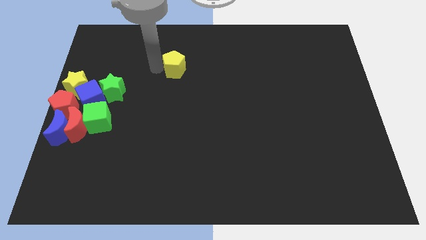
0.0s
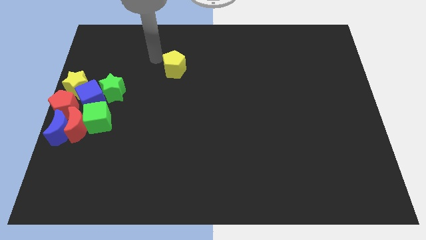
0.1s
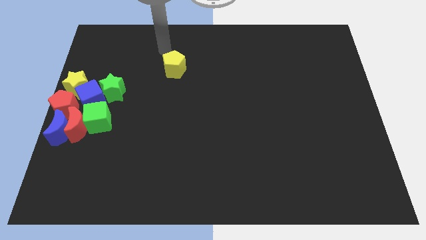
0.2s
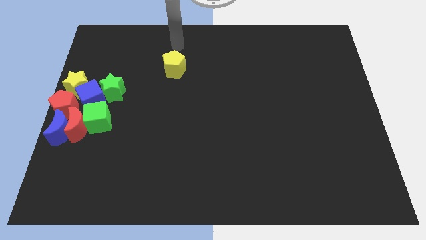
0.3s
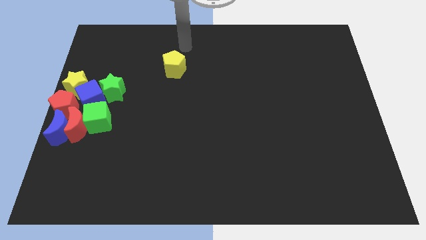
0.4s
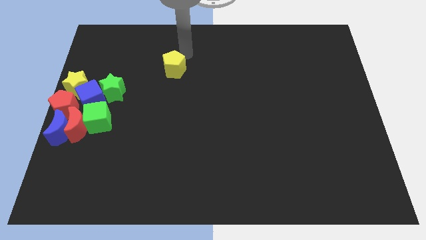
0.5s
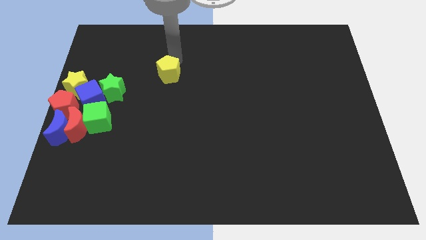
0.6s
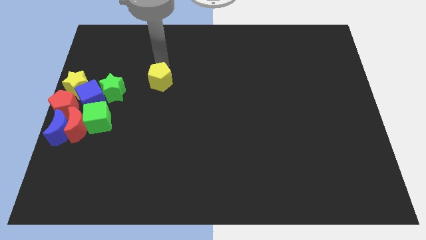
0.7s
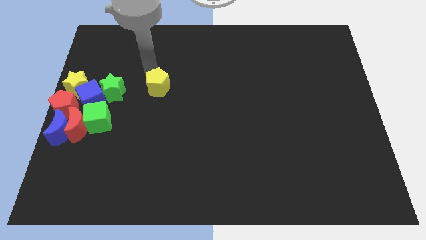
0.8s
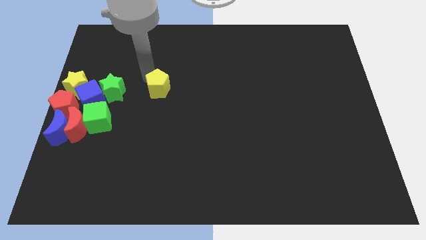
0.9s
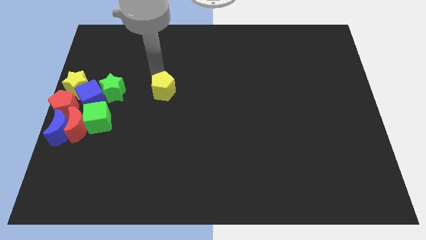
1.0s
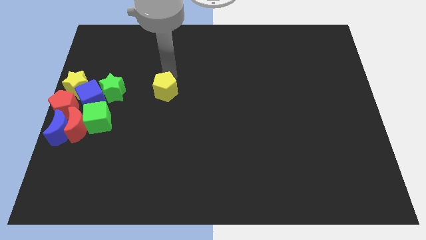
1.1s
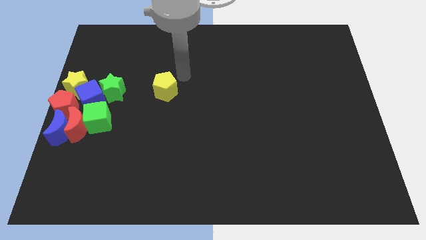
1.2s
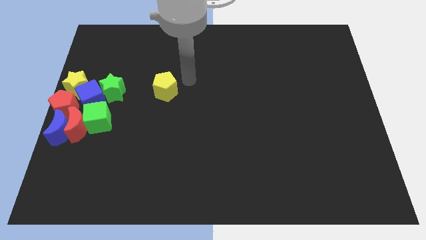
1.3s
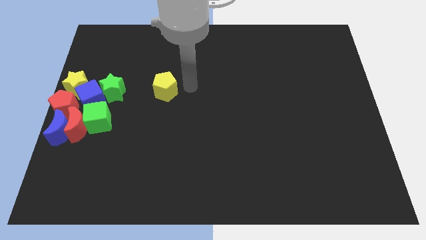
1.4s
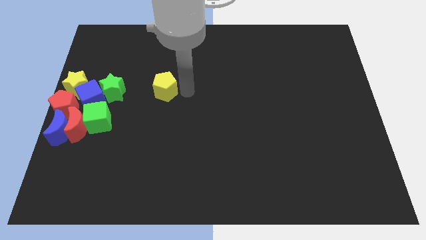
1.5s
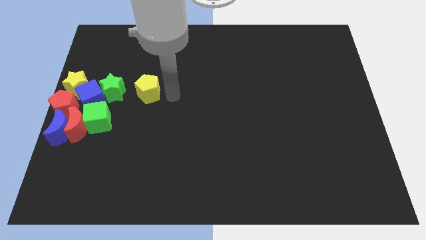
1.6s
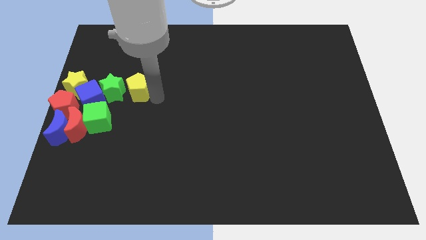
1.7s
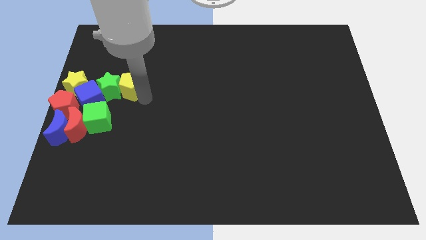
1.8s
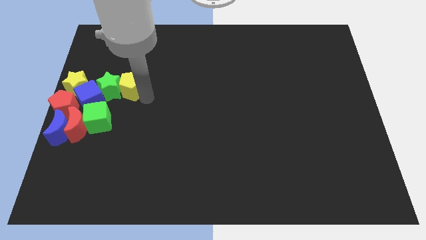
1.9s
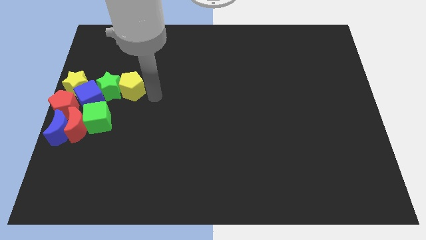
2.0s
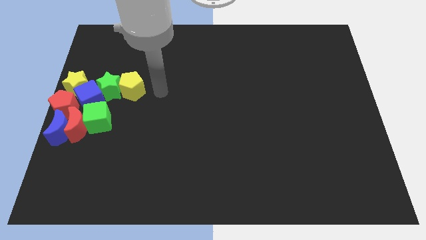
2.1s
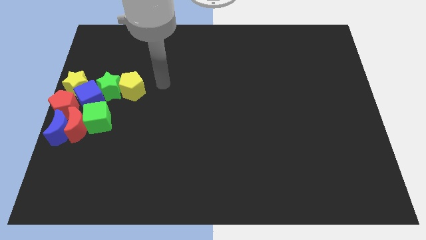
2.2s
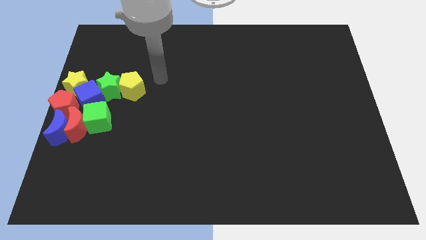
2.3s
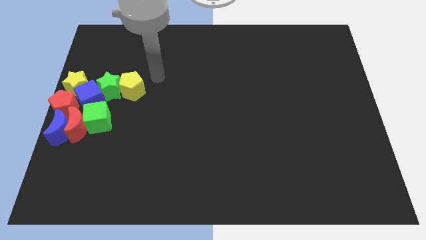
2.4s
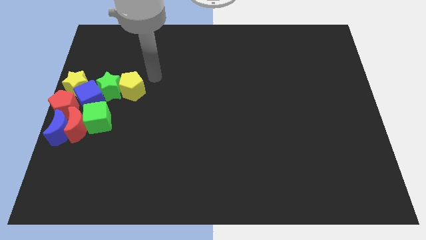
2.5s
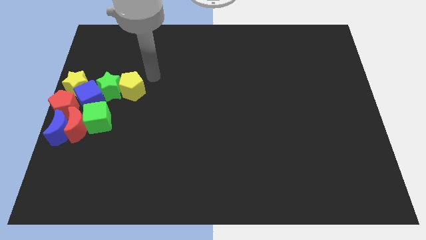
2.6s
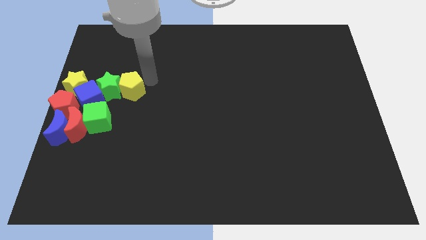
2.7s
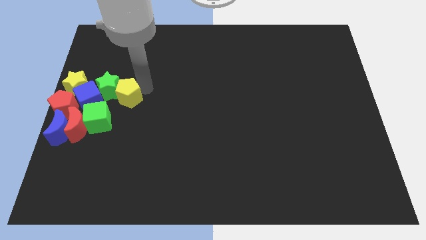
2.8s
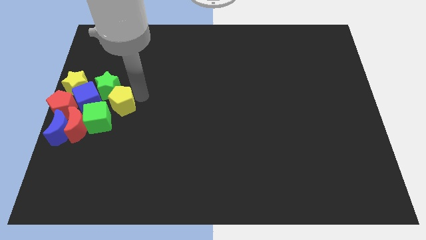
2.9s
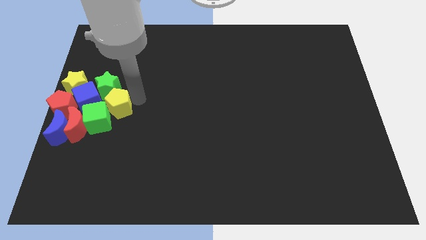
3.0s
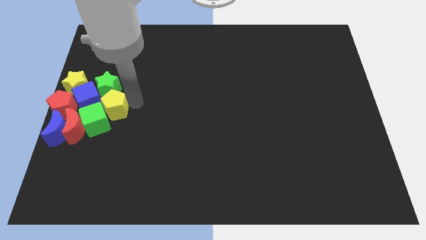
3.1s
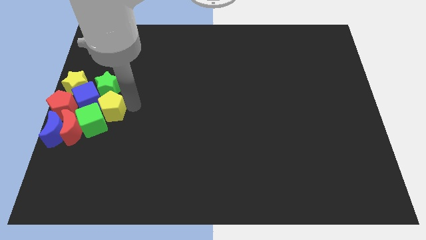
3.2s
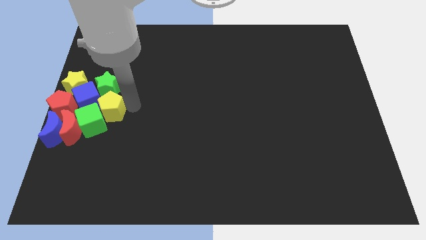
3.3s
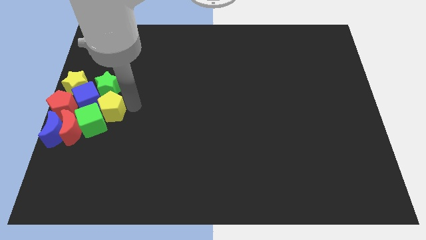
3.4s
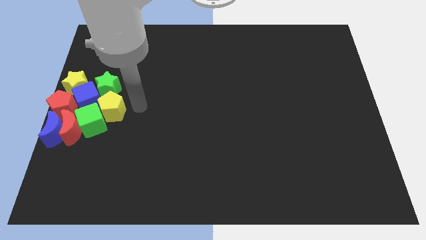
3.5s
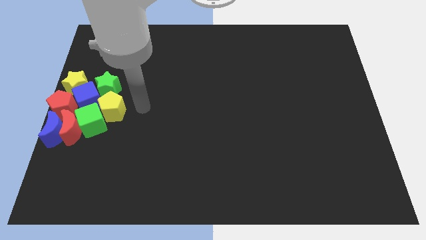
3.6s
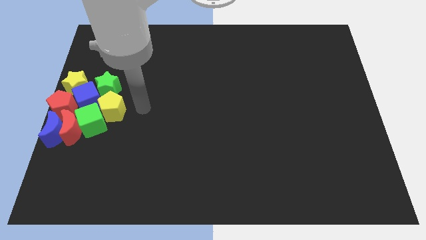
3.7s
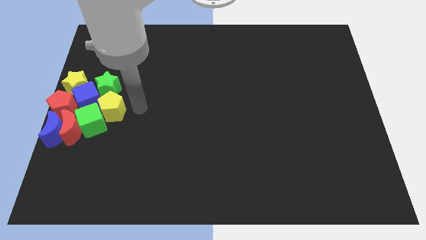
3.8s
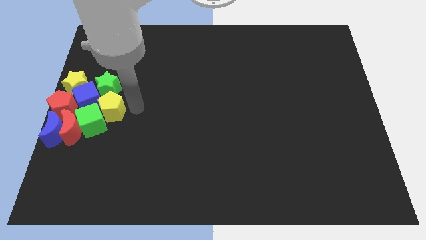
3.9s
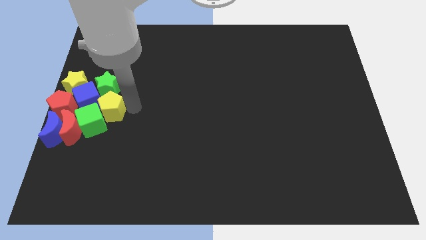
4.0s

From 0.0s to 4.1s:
move the yellow pentagon into the green cube

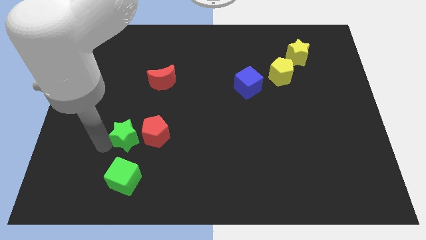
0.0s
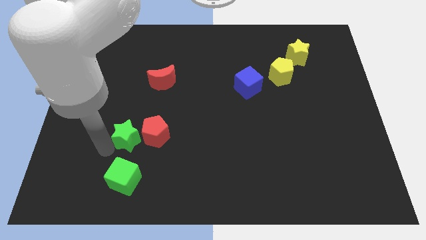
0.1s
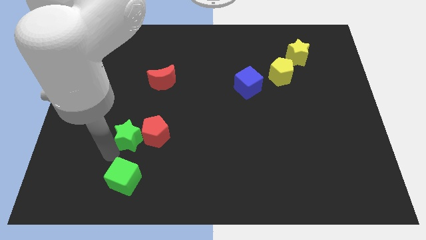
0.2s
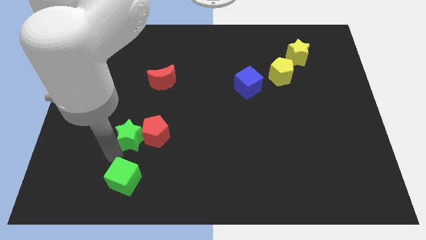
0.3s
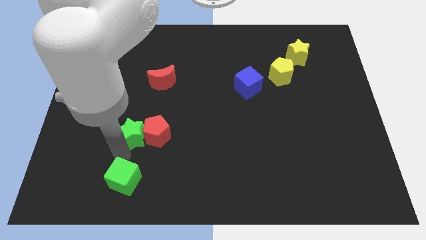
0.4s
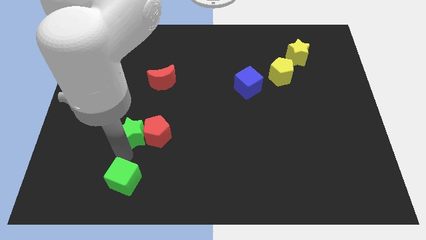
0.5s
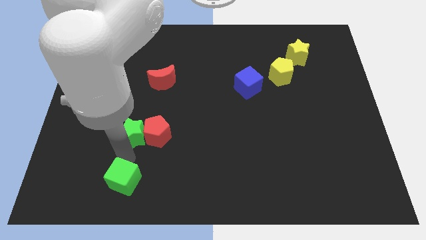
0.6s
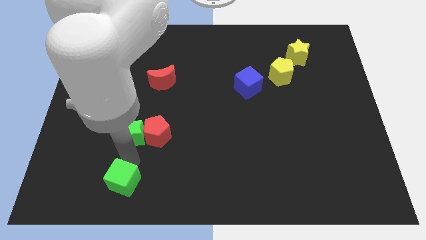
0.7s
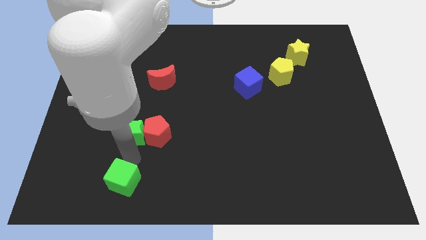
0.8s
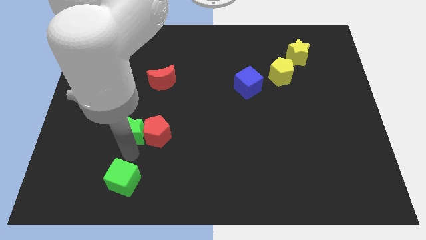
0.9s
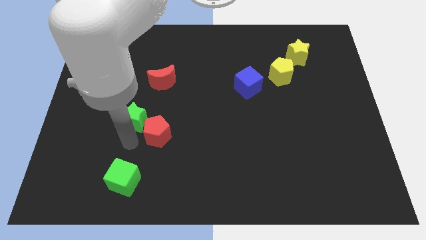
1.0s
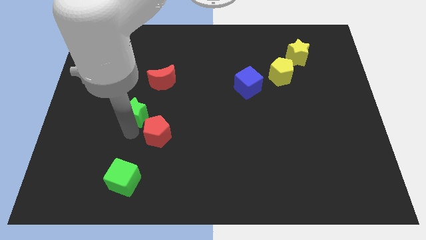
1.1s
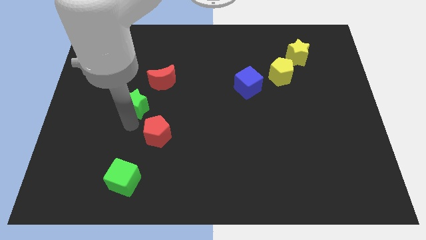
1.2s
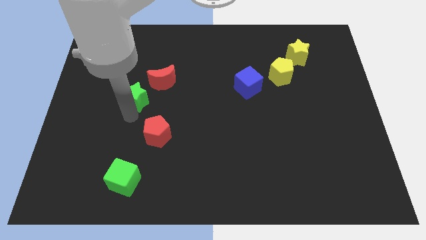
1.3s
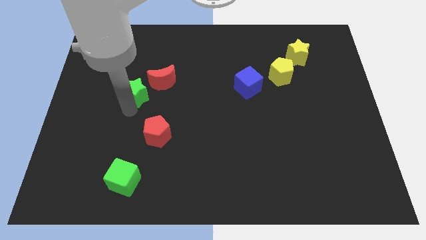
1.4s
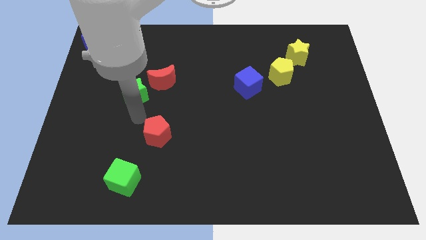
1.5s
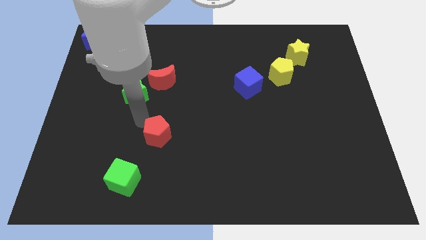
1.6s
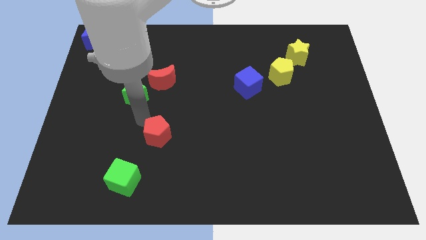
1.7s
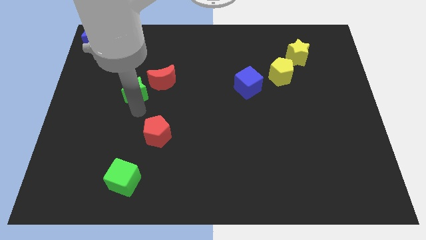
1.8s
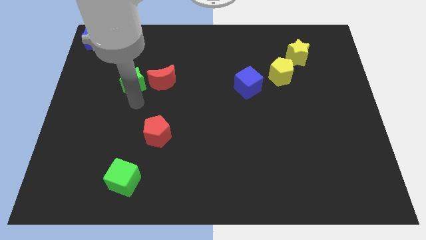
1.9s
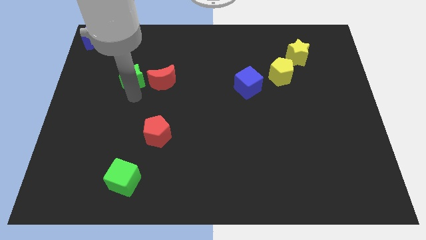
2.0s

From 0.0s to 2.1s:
push the green star to the left of the red crescent

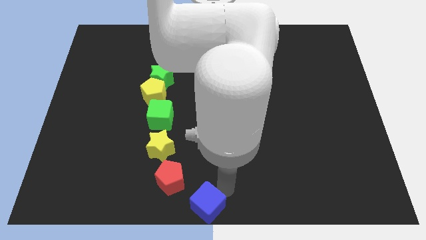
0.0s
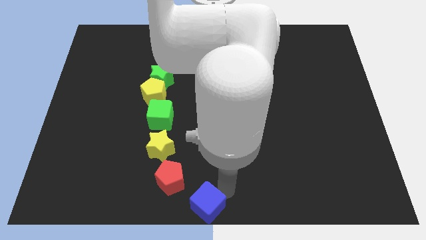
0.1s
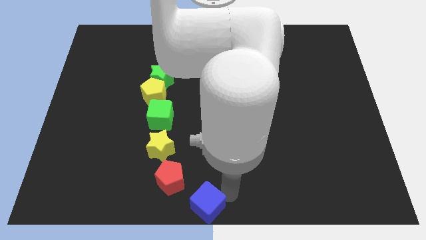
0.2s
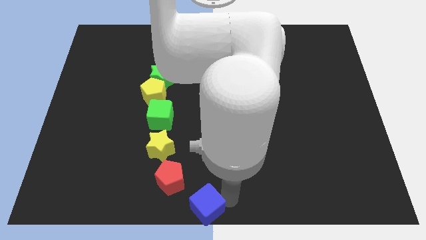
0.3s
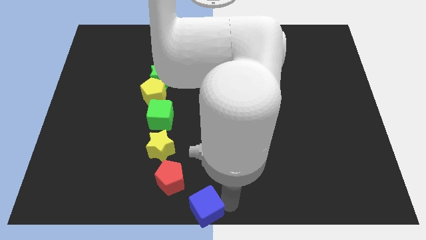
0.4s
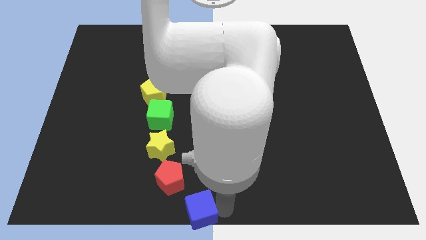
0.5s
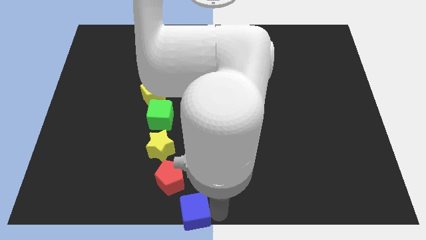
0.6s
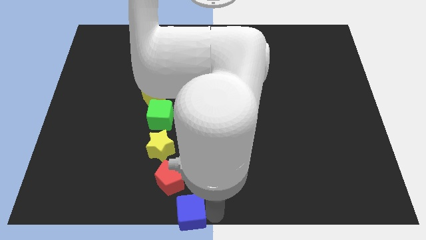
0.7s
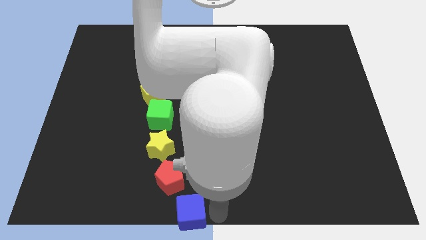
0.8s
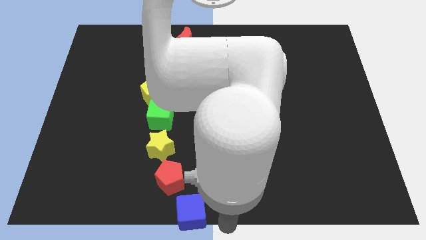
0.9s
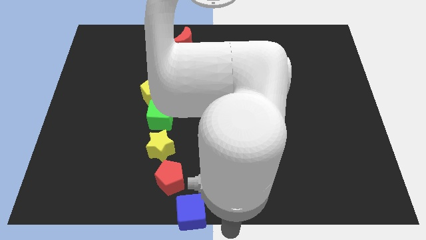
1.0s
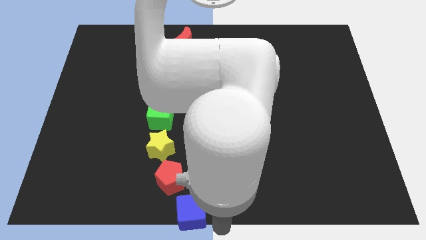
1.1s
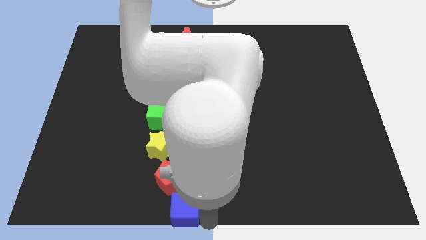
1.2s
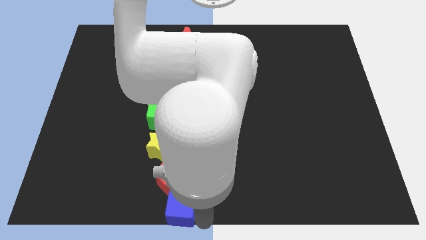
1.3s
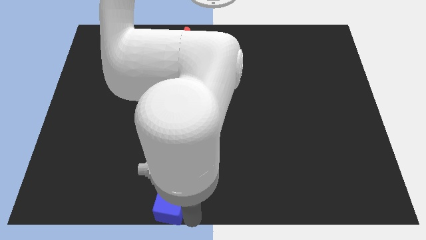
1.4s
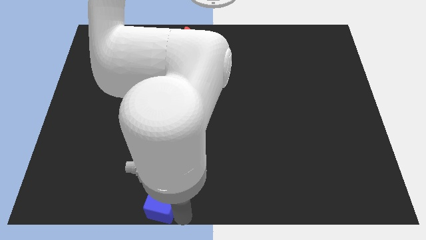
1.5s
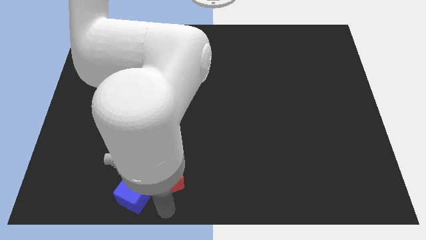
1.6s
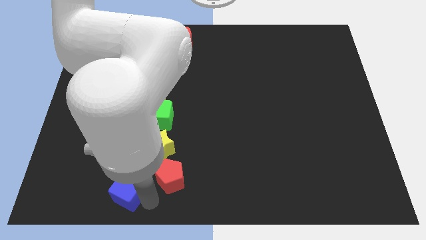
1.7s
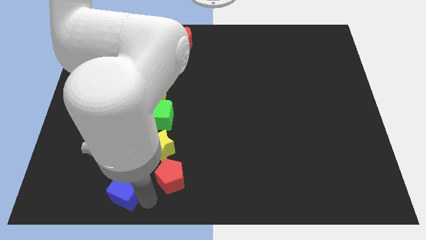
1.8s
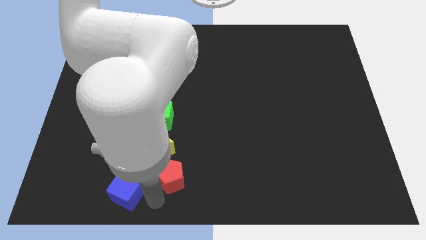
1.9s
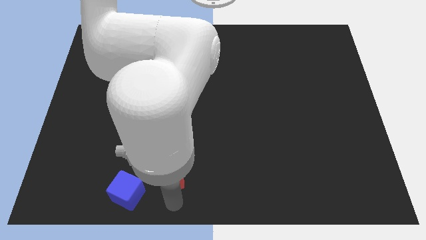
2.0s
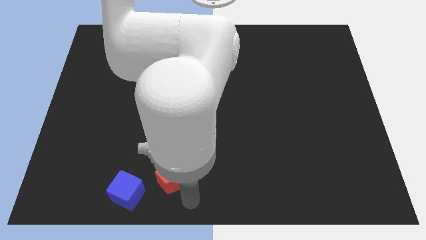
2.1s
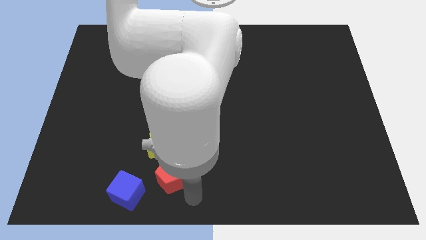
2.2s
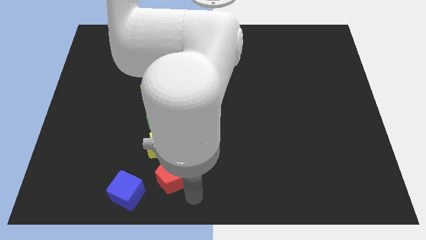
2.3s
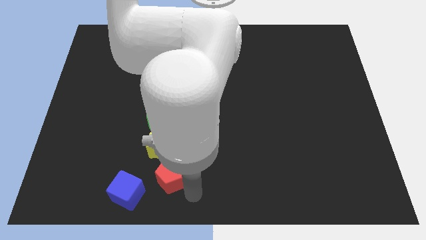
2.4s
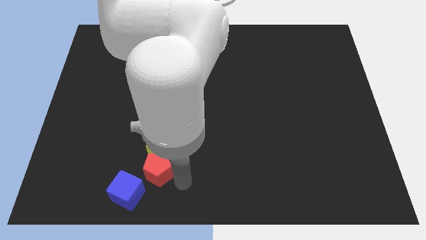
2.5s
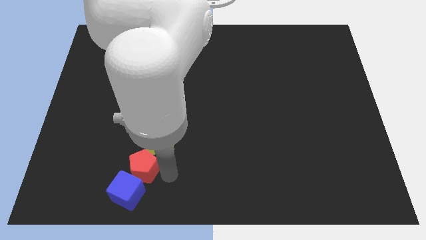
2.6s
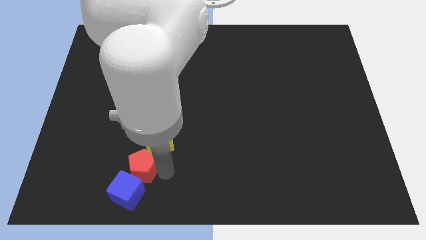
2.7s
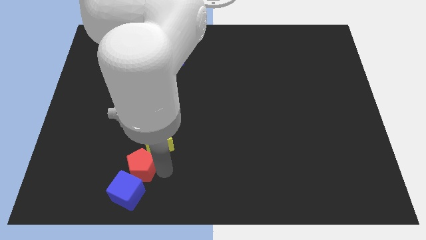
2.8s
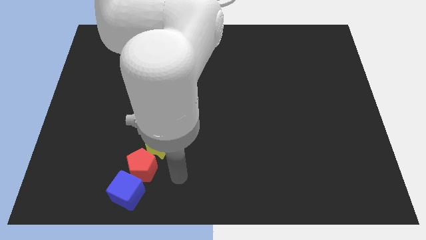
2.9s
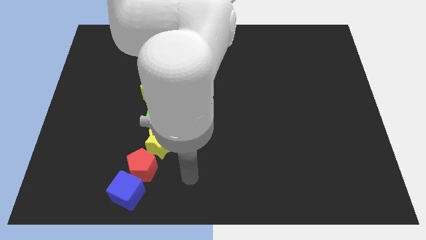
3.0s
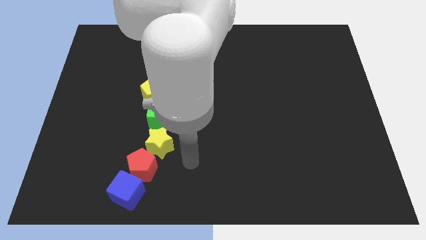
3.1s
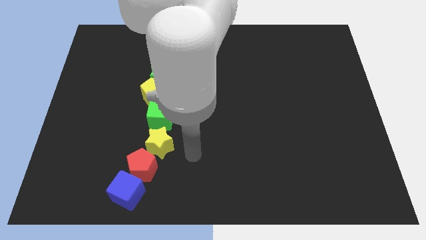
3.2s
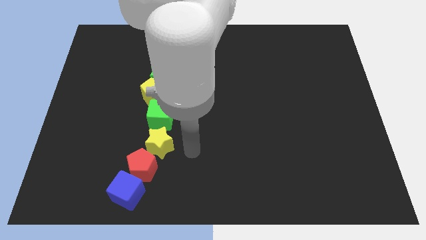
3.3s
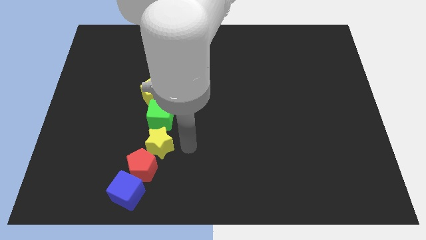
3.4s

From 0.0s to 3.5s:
make a diagonal line with the blue cube red pentagon and yellow star
